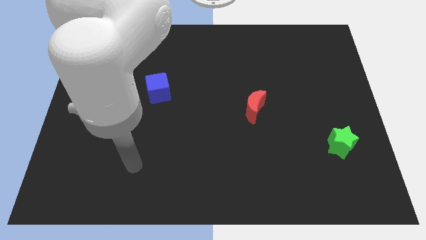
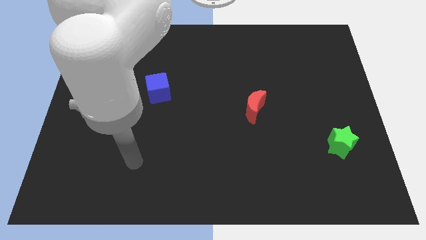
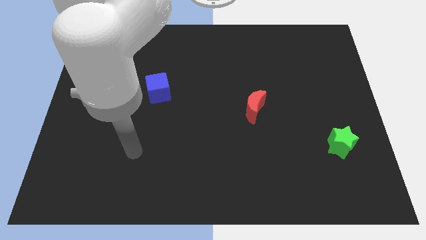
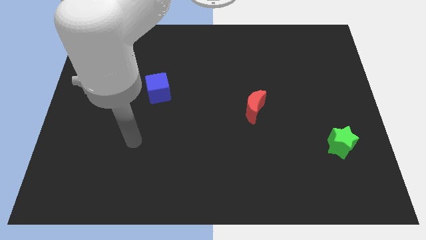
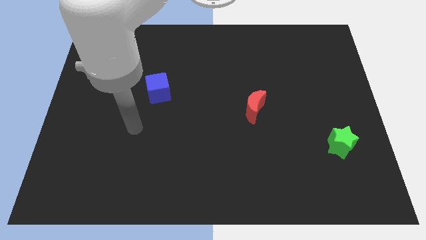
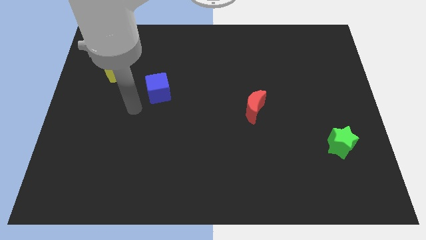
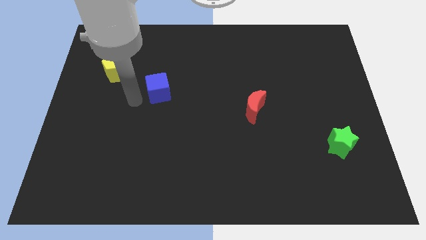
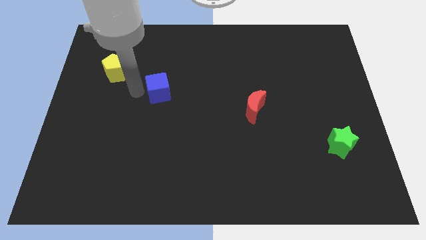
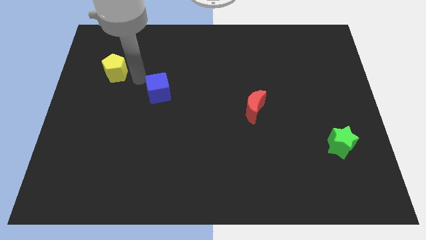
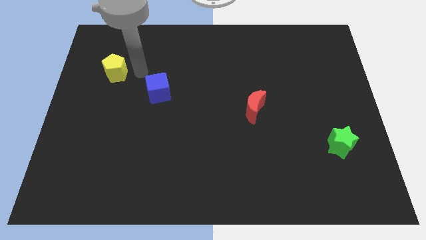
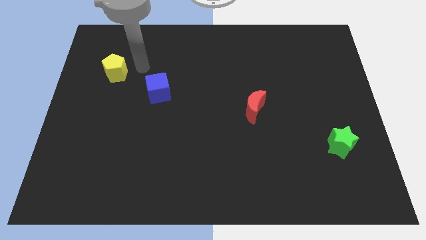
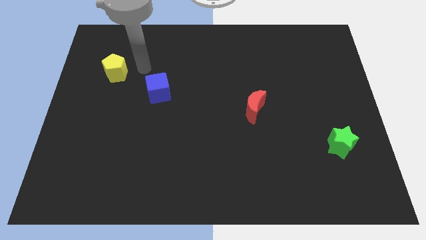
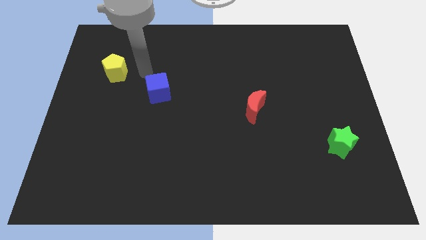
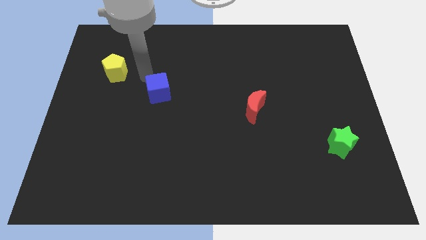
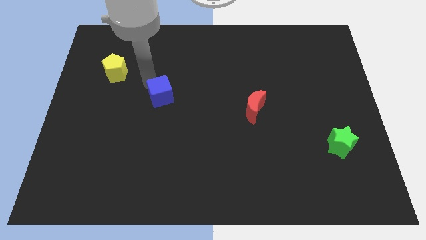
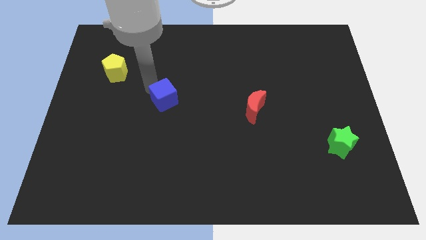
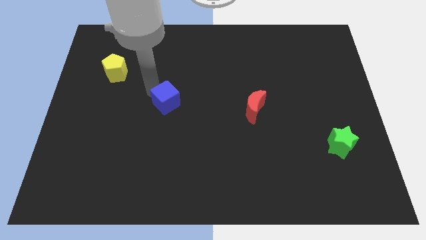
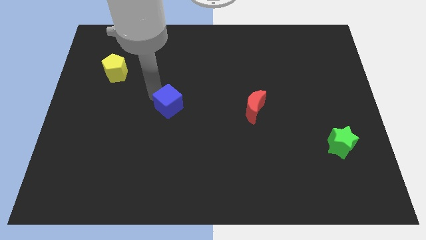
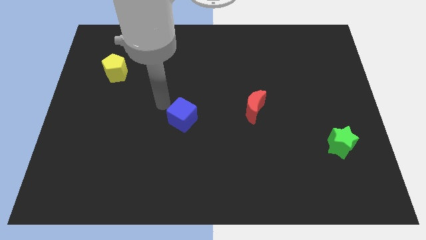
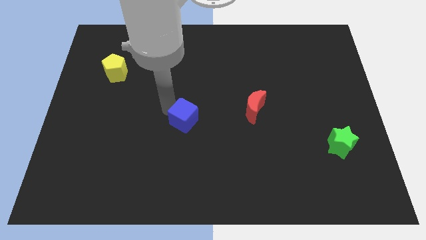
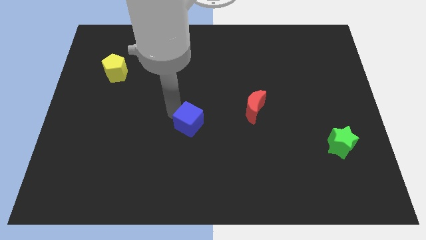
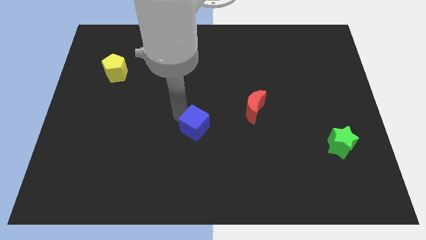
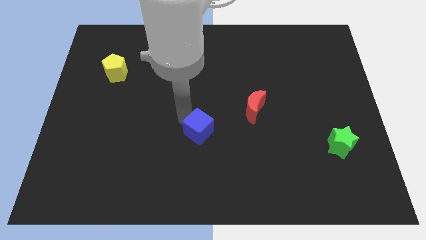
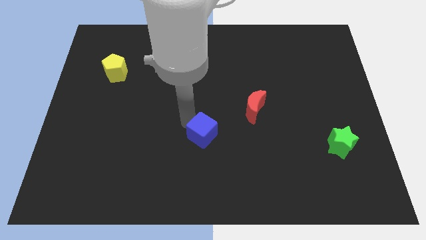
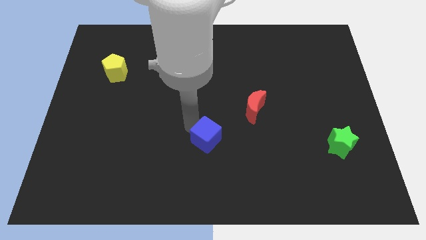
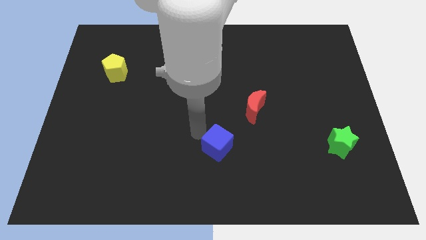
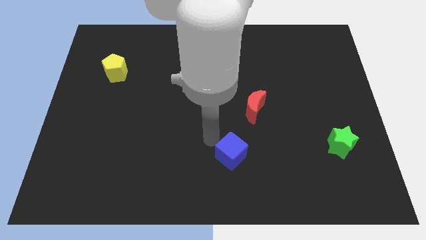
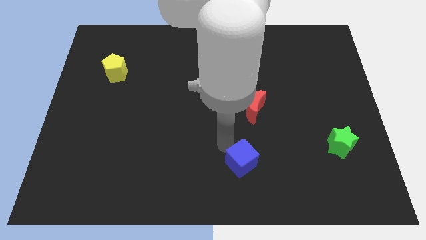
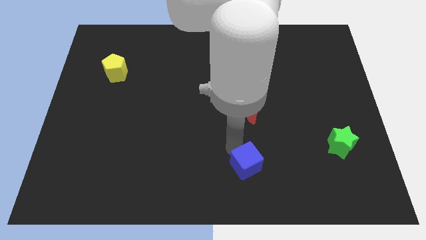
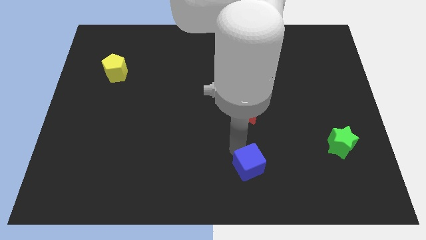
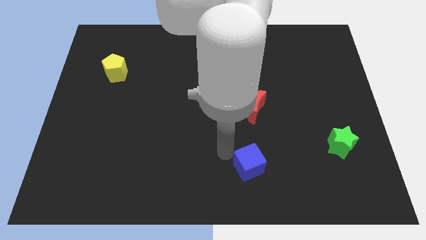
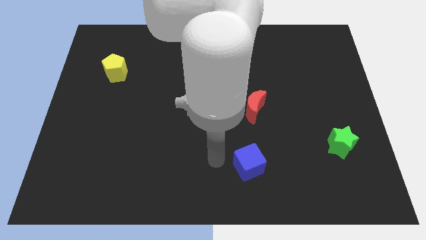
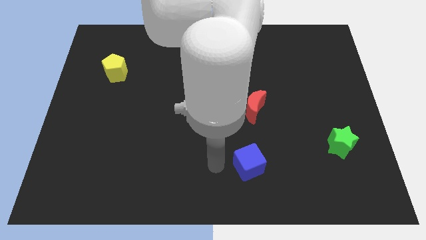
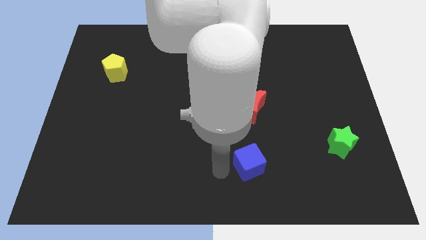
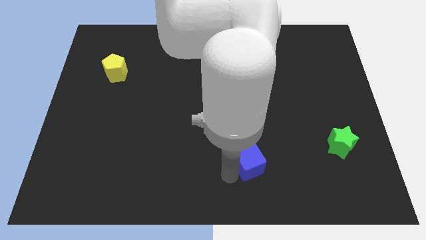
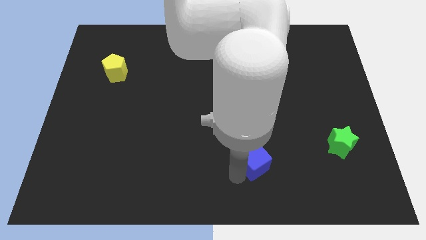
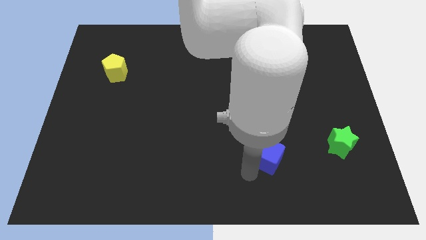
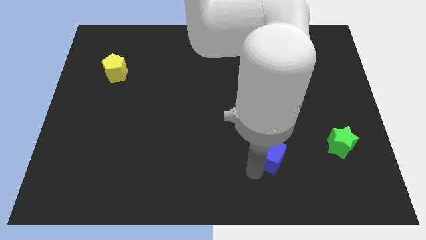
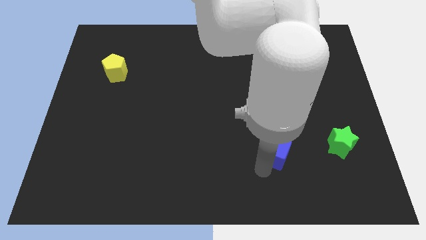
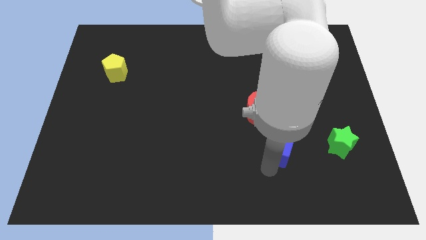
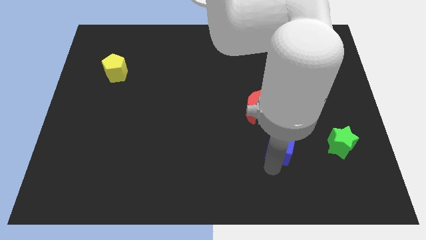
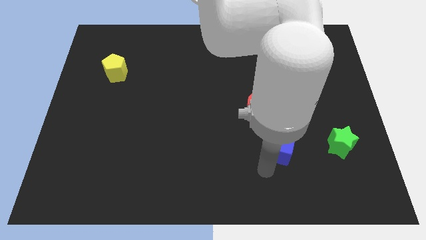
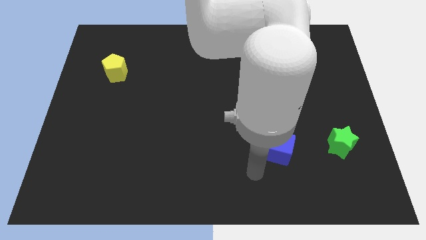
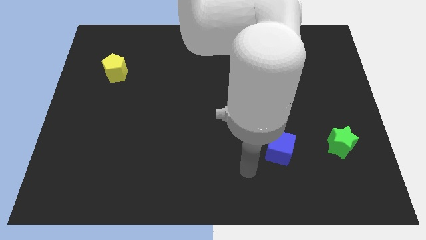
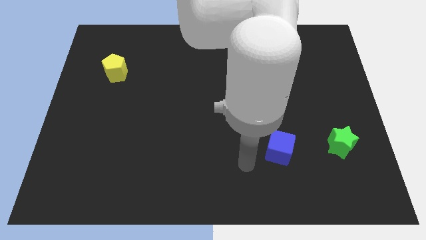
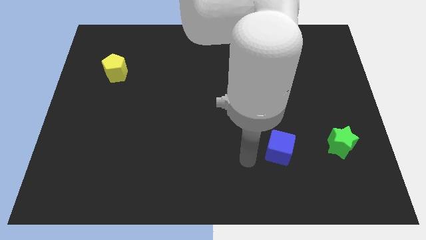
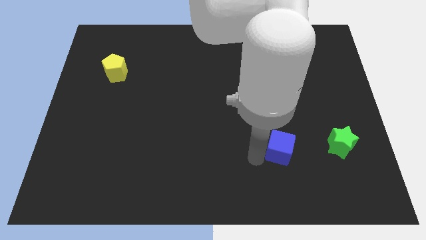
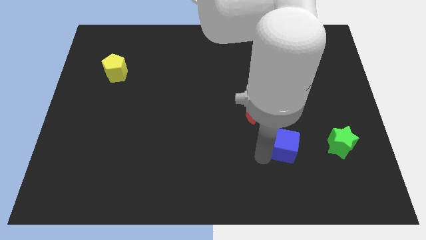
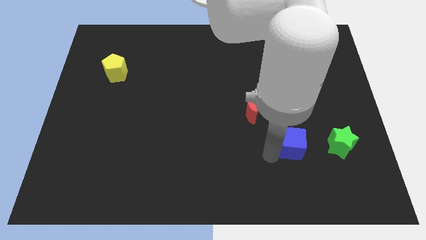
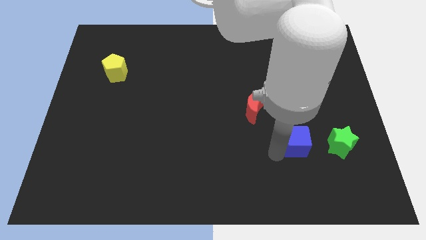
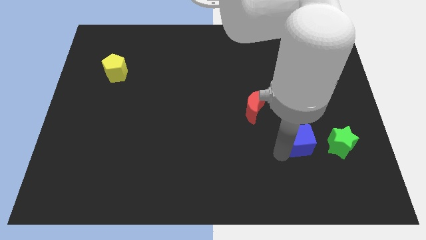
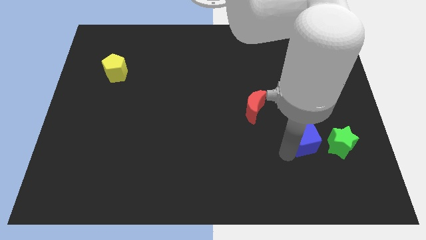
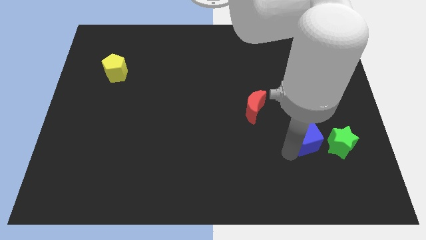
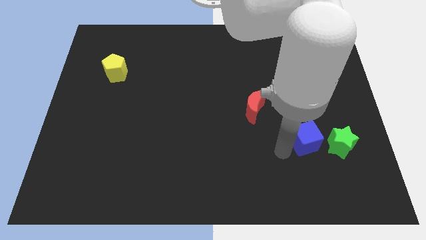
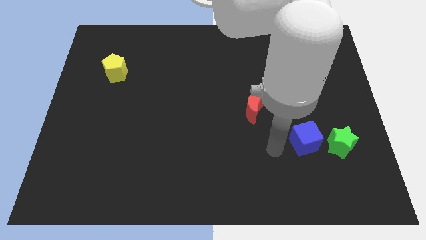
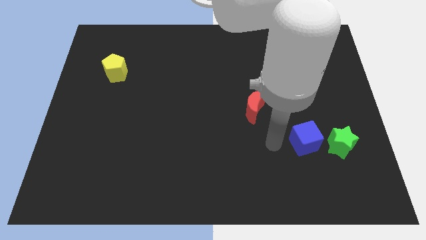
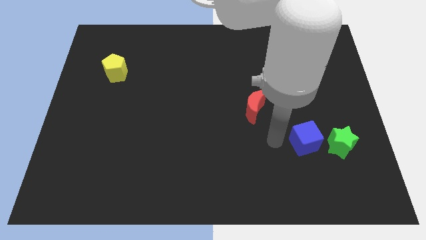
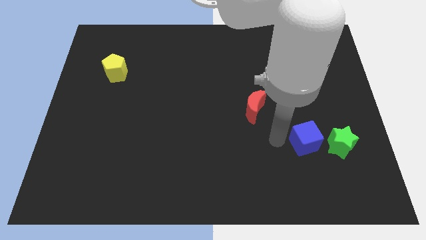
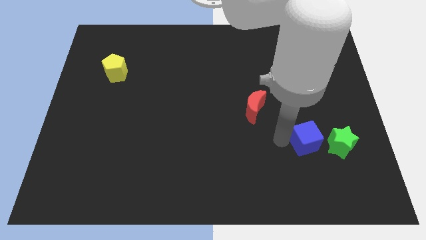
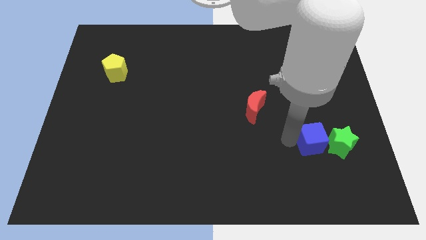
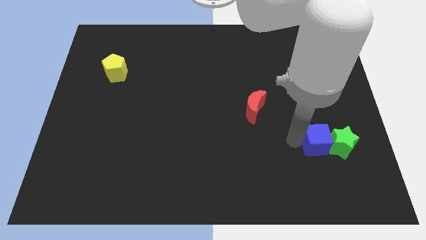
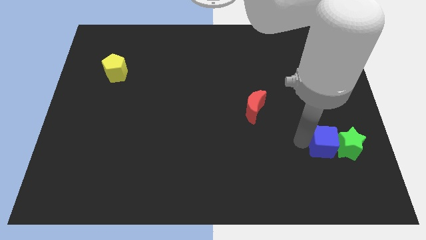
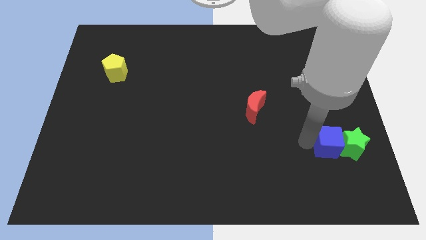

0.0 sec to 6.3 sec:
move the blue block towards the green star

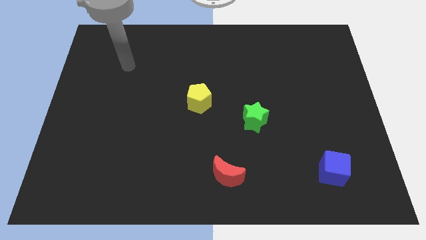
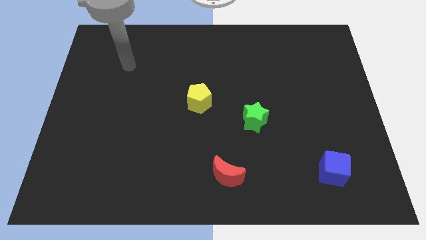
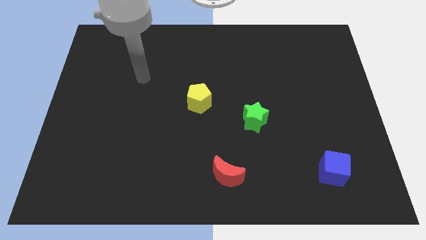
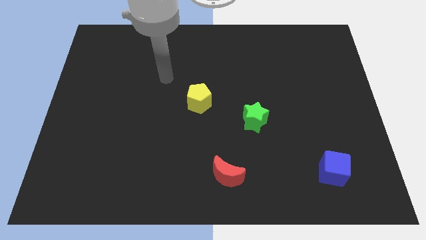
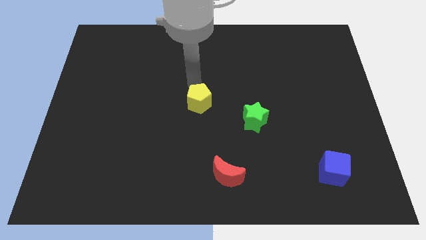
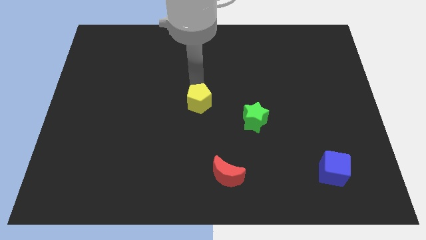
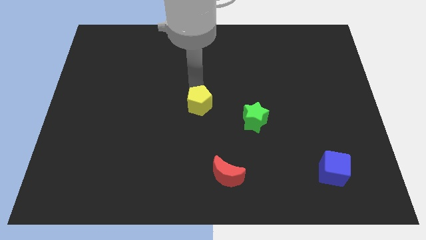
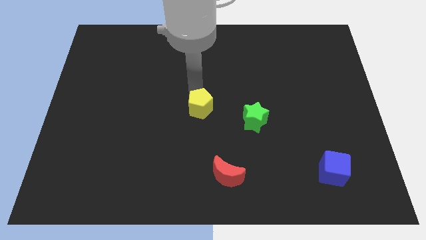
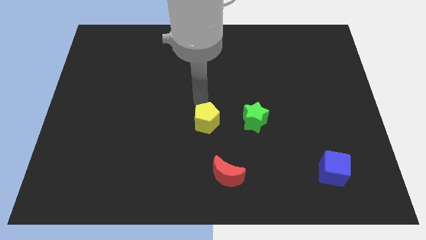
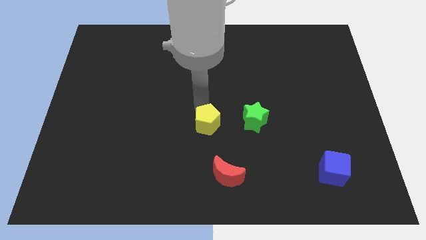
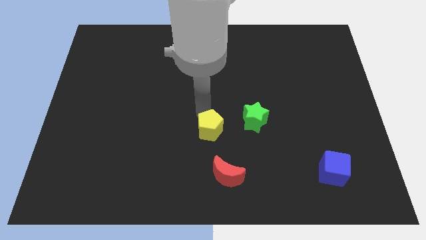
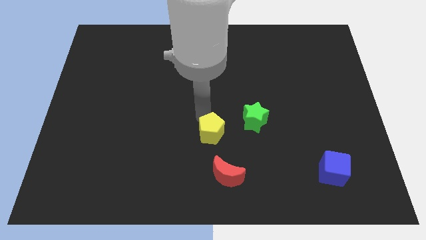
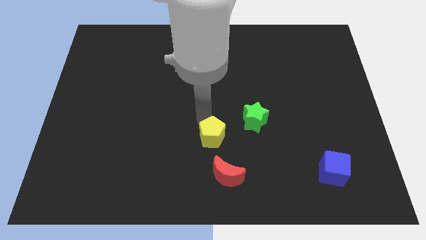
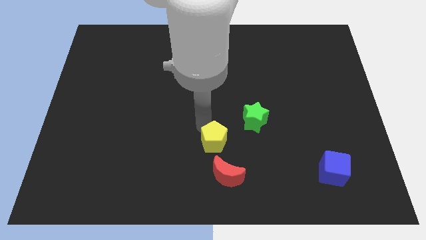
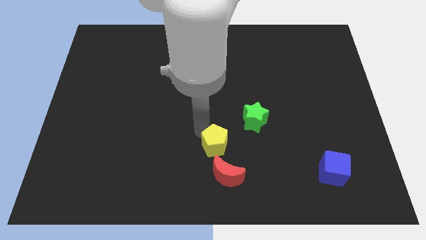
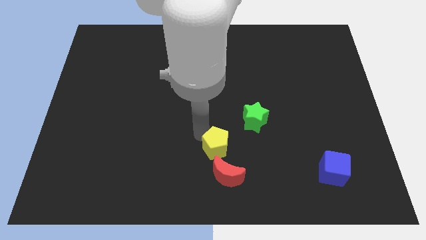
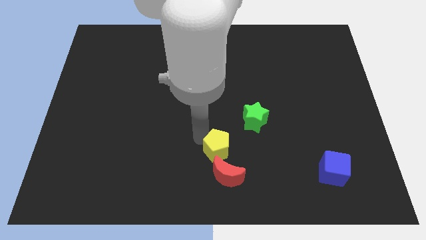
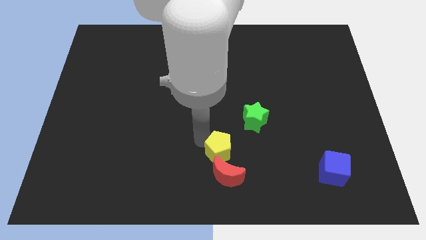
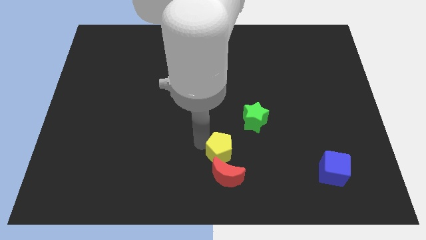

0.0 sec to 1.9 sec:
slide the yellow pentagon to the red moon
